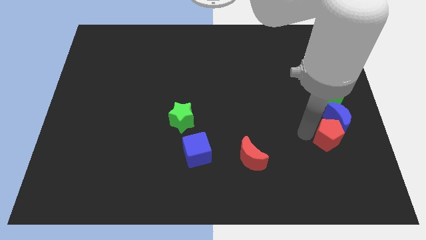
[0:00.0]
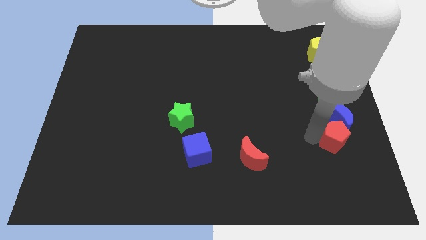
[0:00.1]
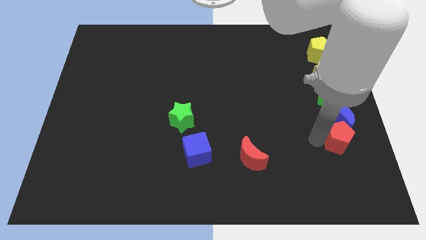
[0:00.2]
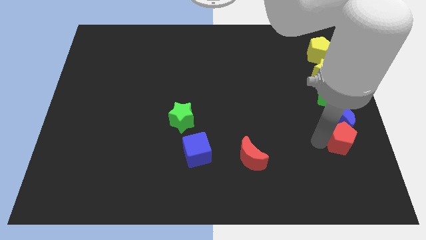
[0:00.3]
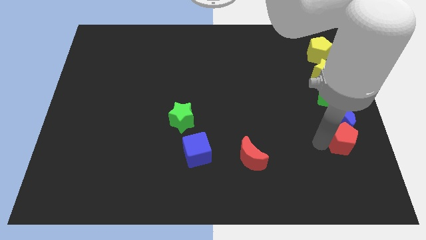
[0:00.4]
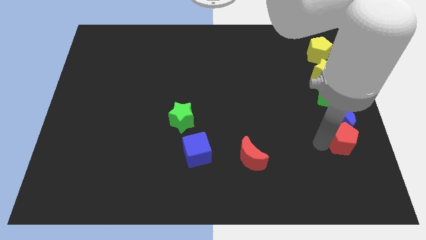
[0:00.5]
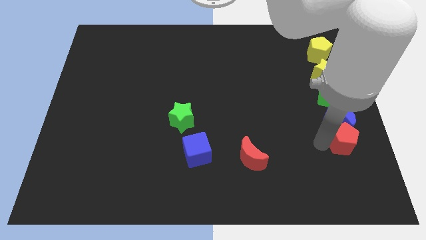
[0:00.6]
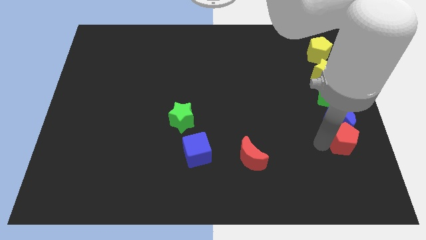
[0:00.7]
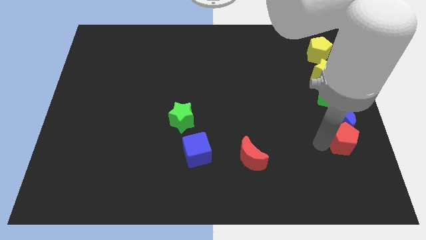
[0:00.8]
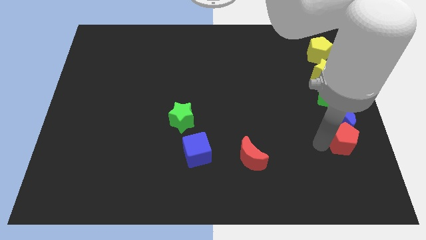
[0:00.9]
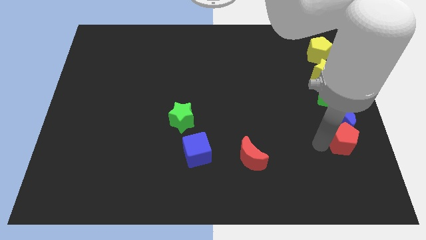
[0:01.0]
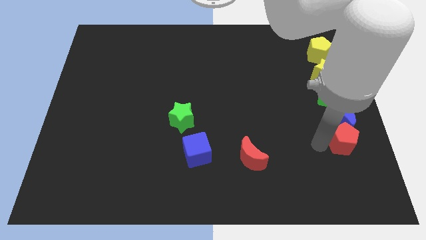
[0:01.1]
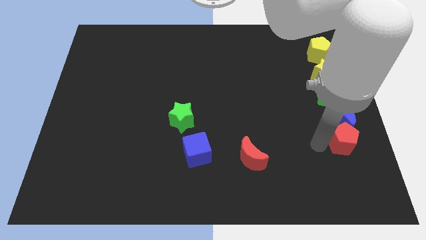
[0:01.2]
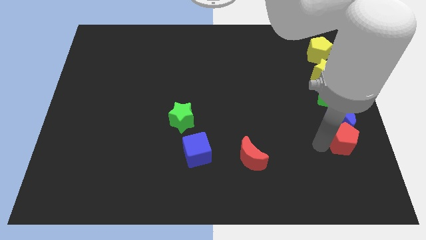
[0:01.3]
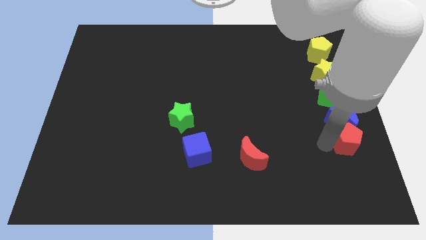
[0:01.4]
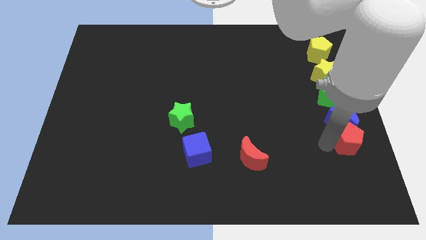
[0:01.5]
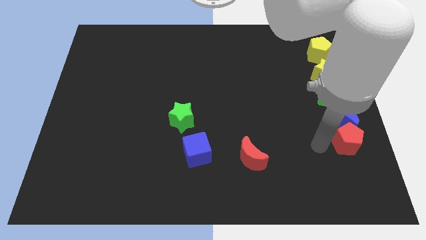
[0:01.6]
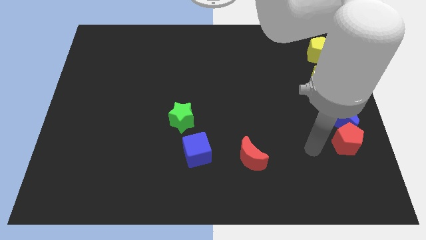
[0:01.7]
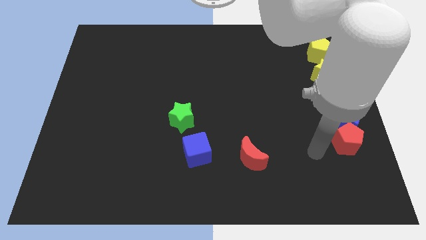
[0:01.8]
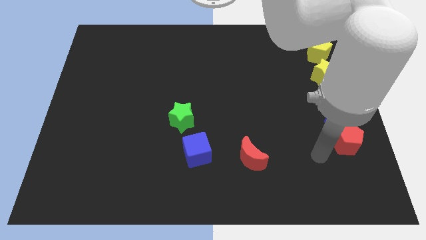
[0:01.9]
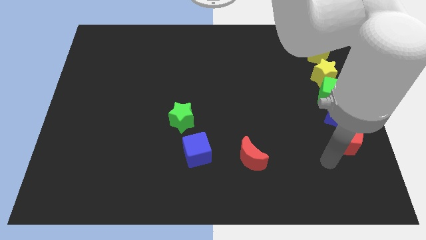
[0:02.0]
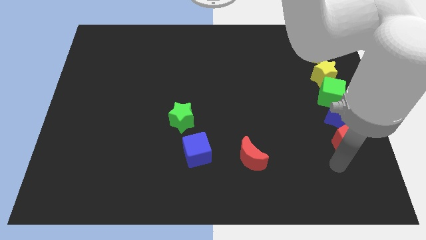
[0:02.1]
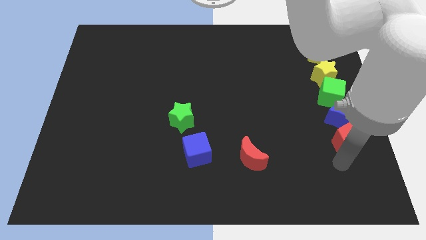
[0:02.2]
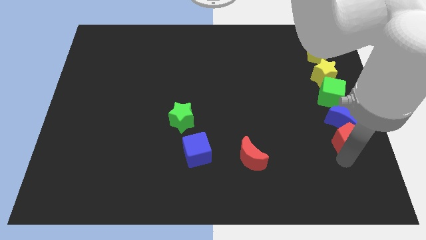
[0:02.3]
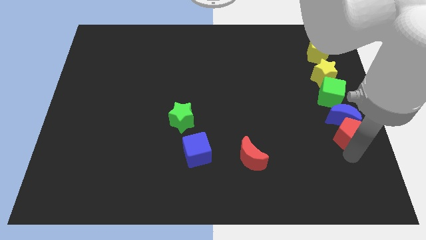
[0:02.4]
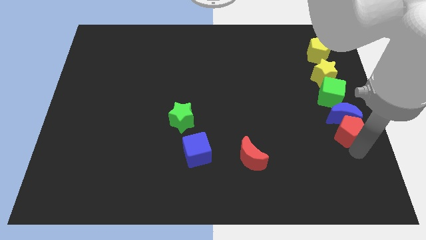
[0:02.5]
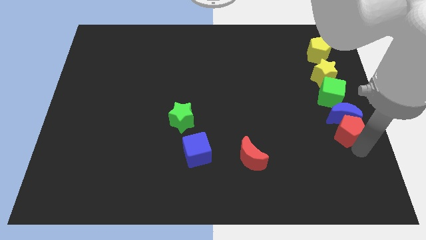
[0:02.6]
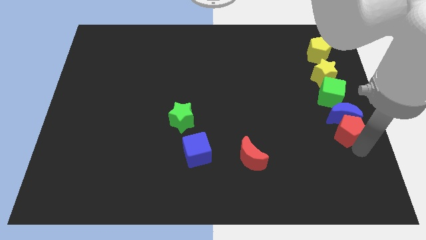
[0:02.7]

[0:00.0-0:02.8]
move the red pentagon towards the bottom of blue crescent

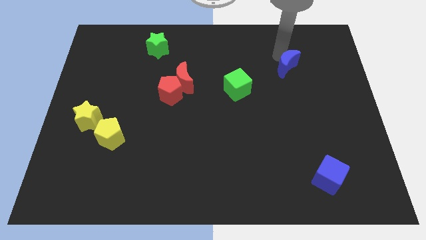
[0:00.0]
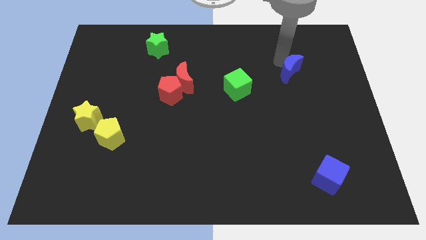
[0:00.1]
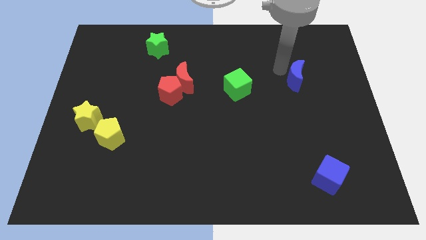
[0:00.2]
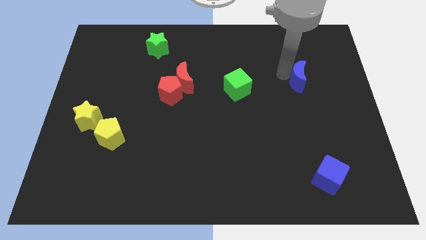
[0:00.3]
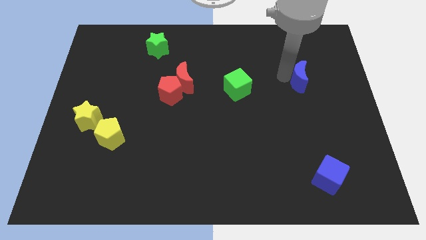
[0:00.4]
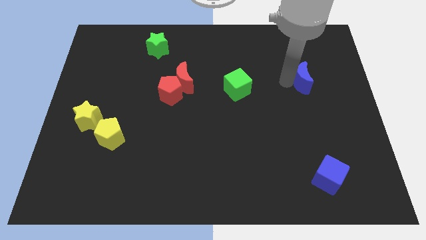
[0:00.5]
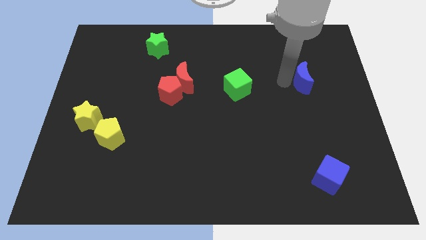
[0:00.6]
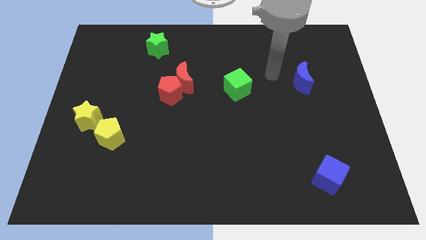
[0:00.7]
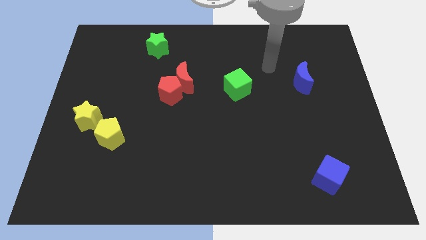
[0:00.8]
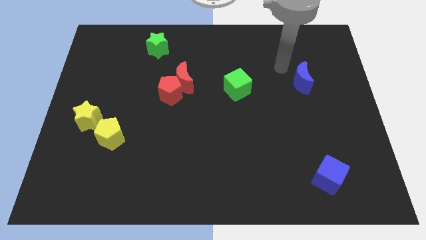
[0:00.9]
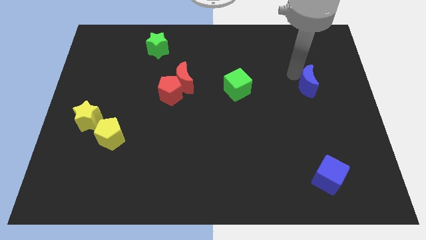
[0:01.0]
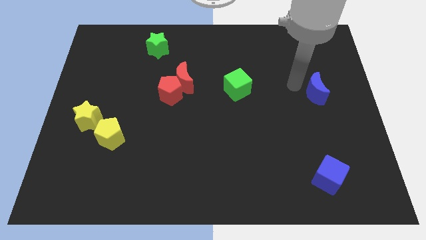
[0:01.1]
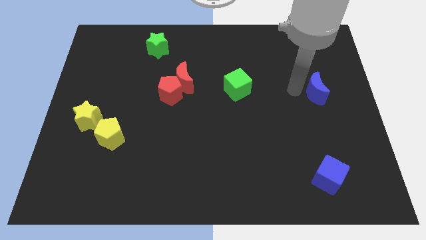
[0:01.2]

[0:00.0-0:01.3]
put the blue crescent horizontally at the right side of the green cube

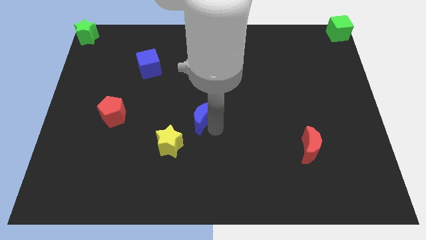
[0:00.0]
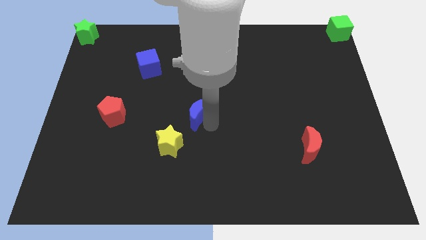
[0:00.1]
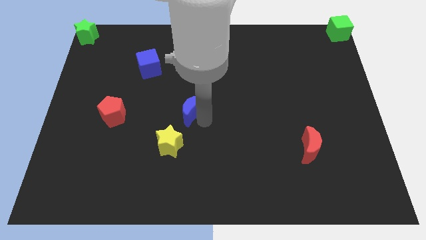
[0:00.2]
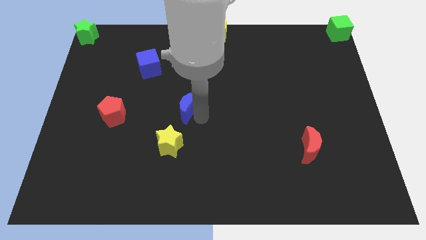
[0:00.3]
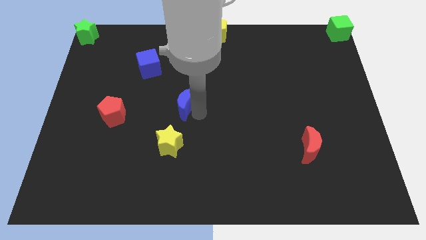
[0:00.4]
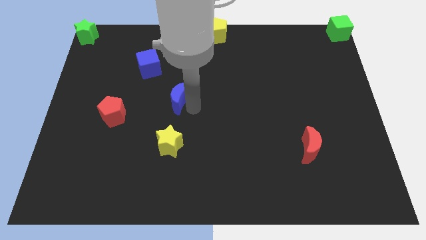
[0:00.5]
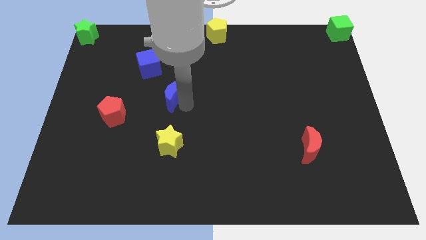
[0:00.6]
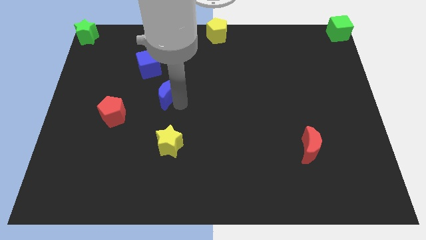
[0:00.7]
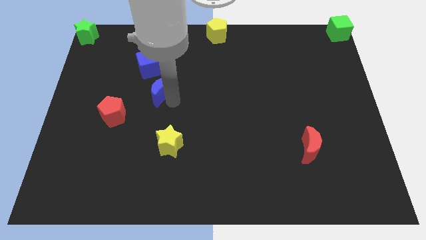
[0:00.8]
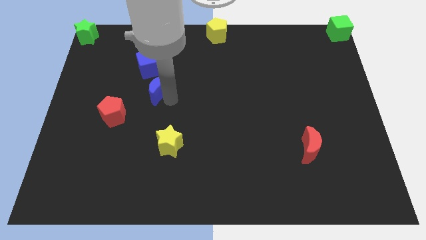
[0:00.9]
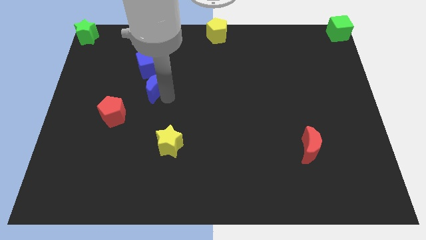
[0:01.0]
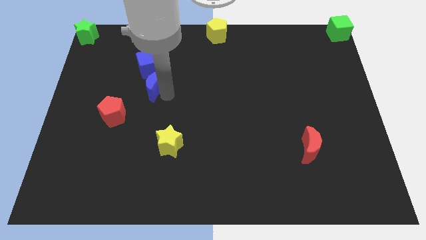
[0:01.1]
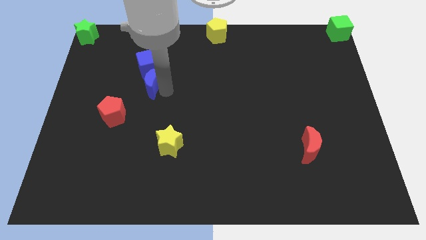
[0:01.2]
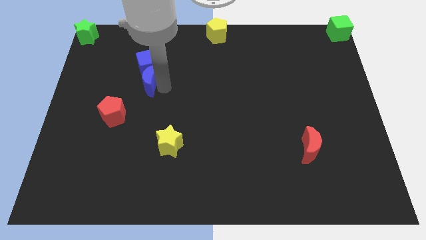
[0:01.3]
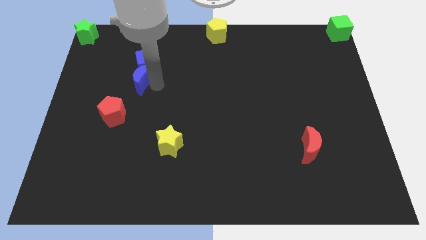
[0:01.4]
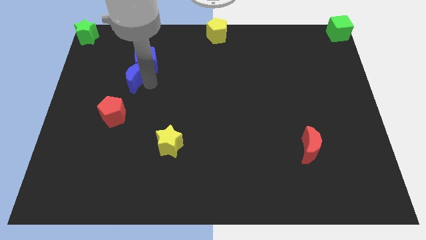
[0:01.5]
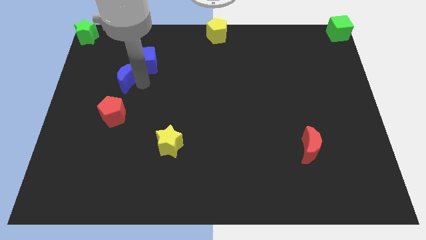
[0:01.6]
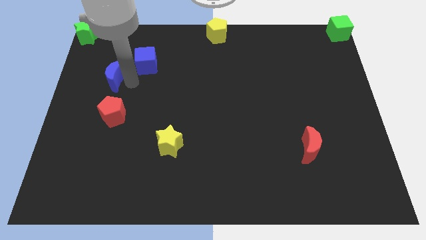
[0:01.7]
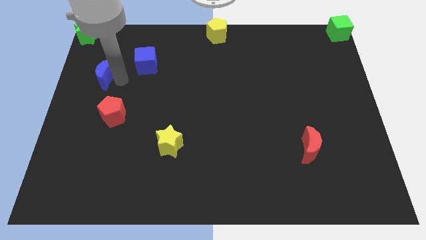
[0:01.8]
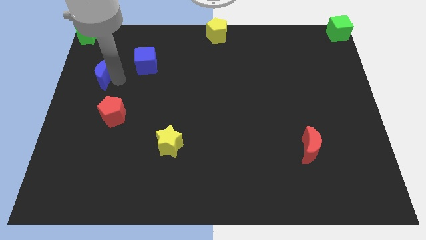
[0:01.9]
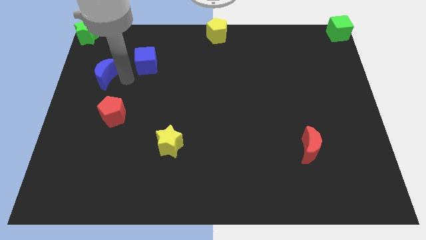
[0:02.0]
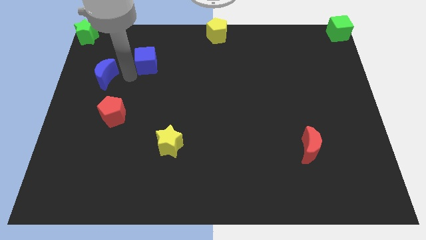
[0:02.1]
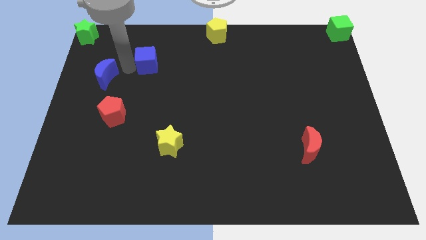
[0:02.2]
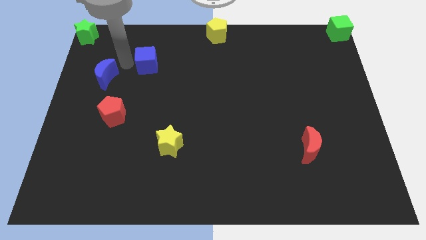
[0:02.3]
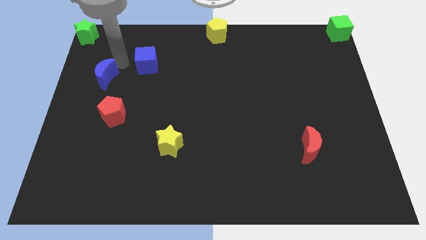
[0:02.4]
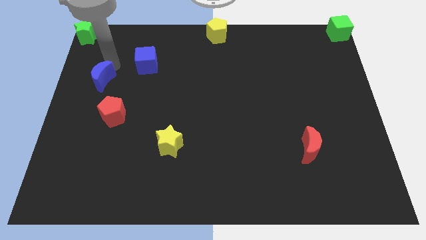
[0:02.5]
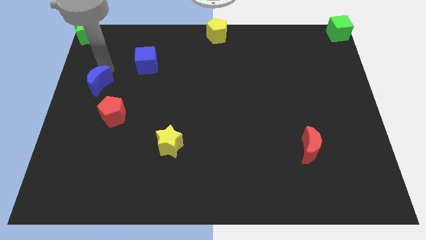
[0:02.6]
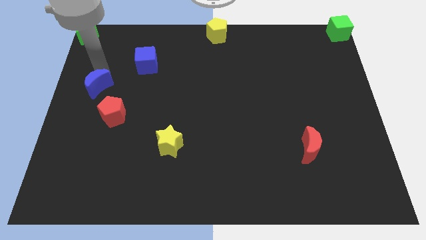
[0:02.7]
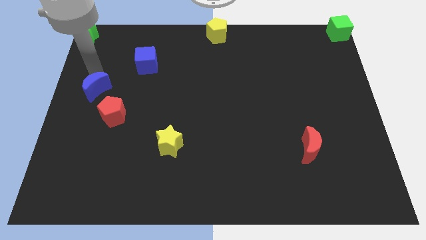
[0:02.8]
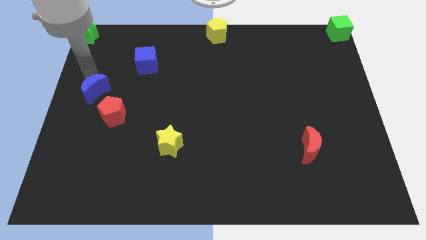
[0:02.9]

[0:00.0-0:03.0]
push the blue crescent to the top left of the red pentagon

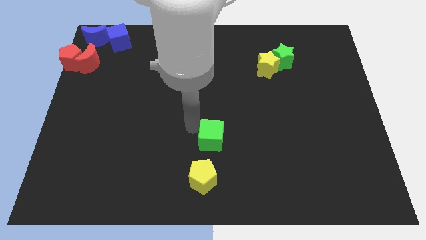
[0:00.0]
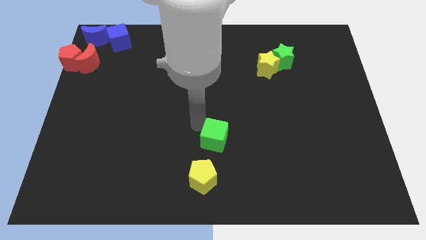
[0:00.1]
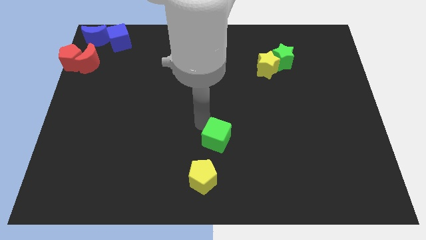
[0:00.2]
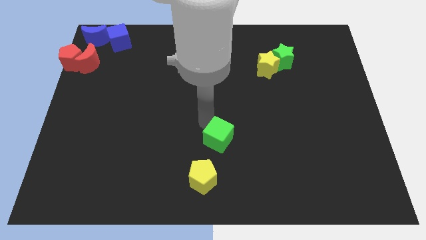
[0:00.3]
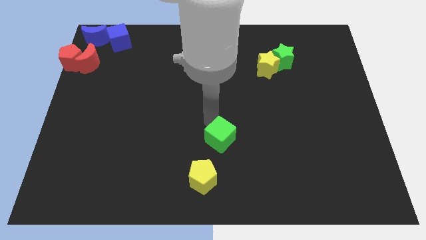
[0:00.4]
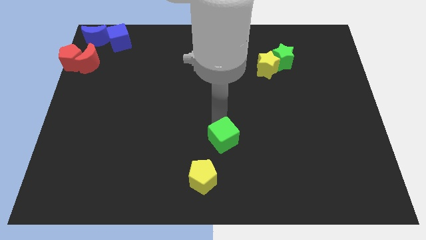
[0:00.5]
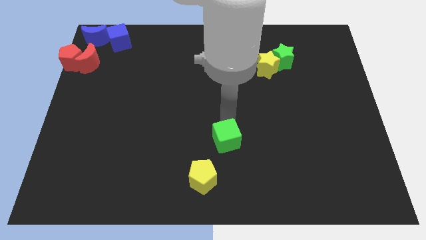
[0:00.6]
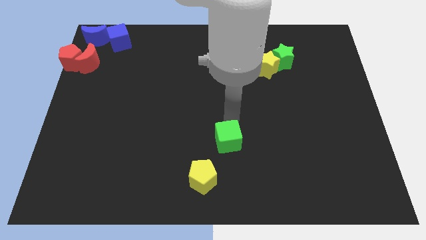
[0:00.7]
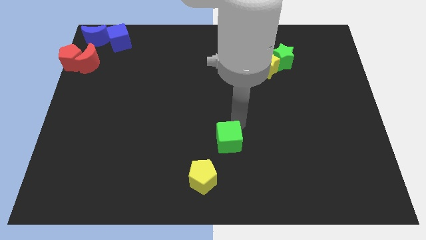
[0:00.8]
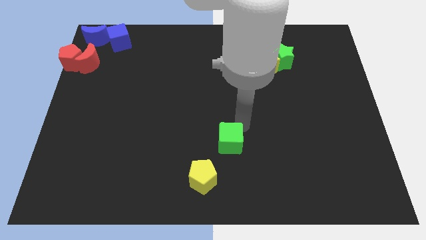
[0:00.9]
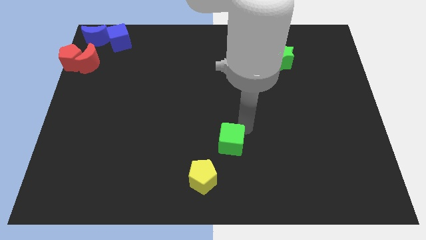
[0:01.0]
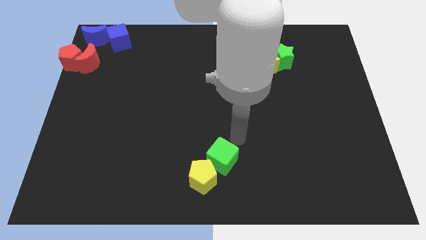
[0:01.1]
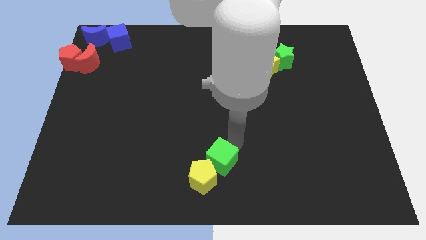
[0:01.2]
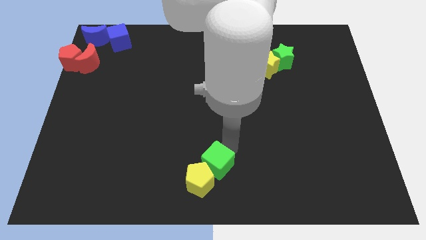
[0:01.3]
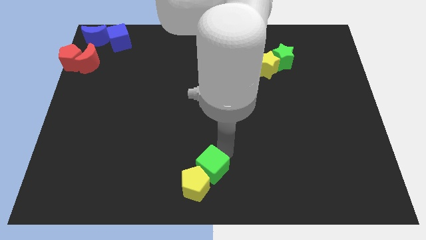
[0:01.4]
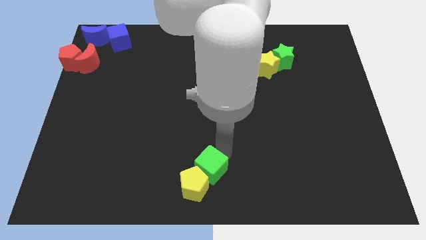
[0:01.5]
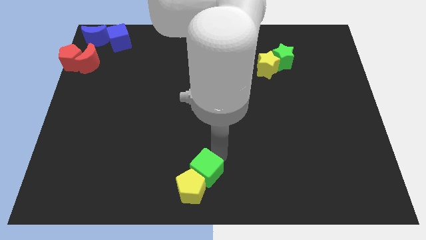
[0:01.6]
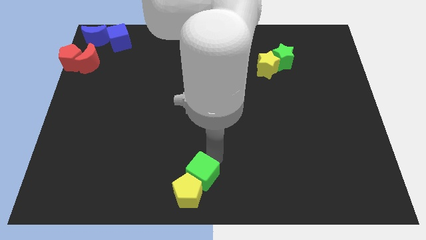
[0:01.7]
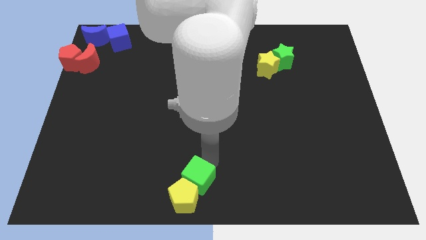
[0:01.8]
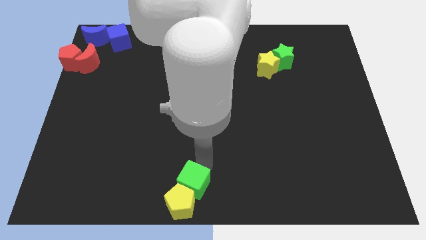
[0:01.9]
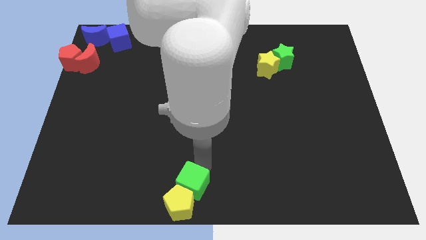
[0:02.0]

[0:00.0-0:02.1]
move the green cube and yellow pentagon to the bottom
